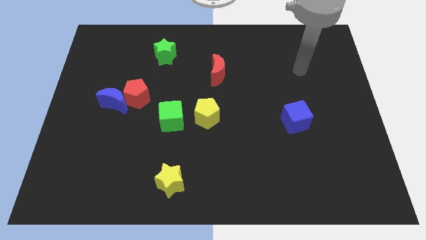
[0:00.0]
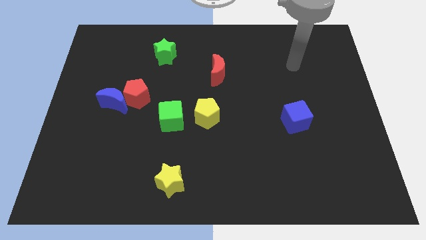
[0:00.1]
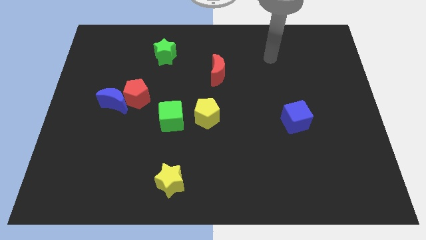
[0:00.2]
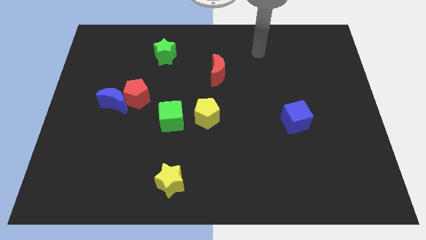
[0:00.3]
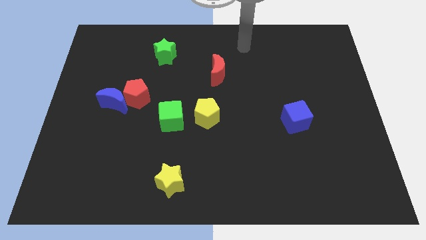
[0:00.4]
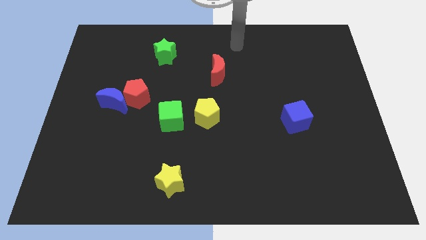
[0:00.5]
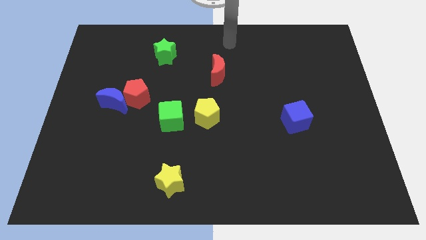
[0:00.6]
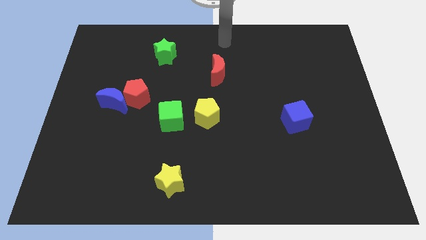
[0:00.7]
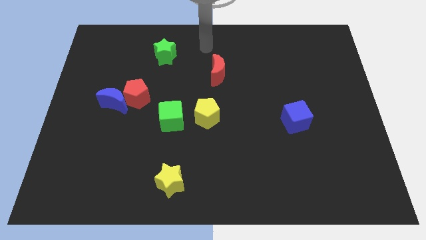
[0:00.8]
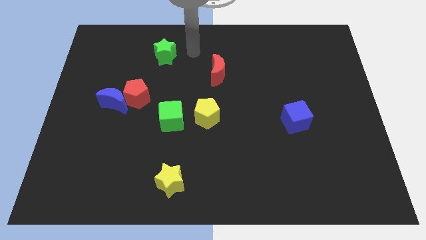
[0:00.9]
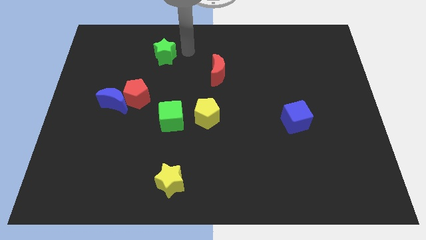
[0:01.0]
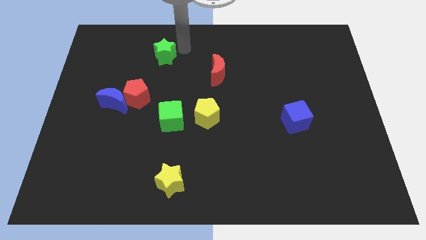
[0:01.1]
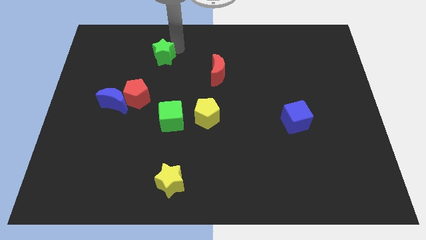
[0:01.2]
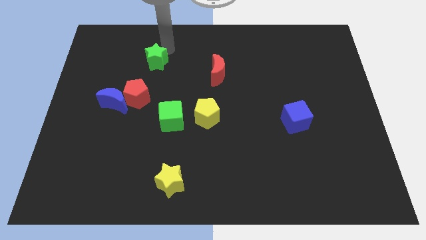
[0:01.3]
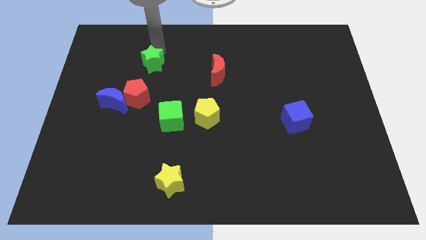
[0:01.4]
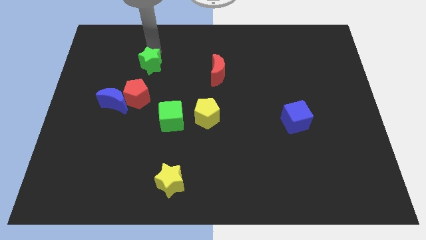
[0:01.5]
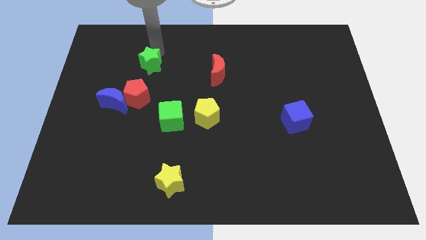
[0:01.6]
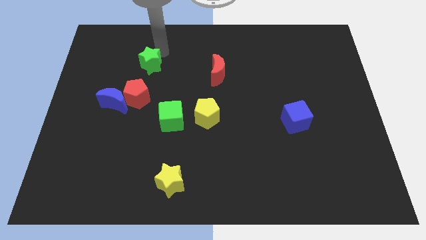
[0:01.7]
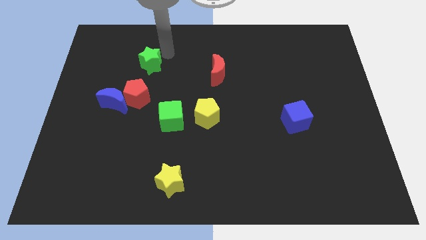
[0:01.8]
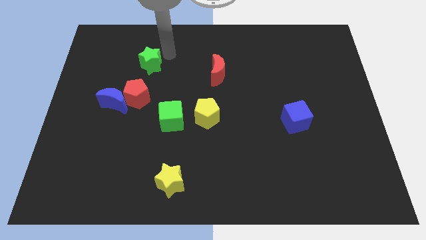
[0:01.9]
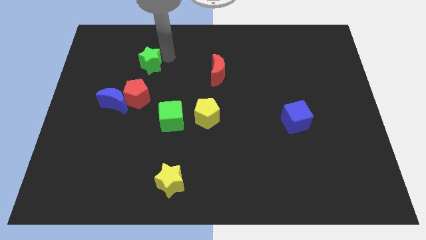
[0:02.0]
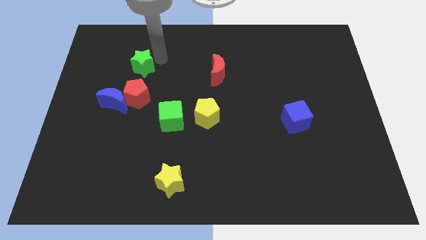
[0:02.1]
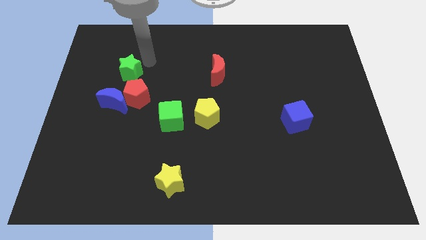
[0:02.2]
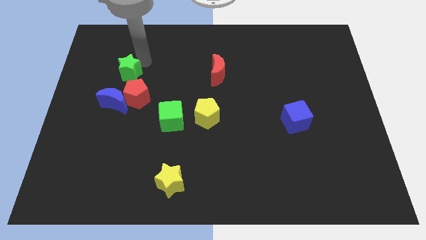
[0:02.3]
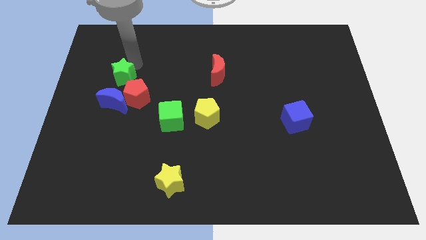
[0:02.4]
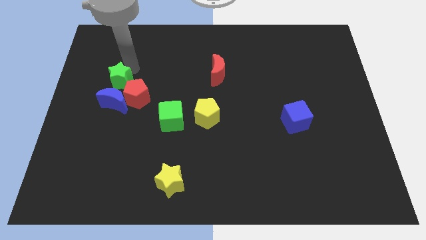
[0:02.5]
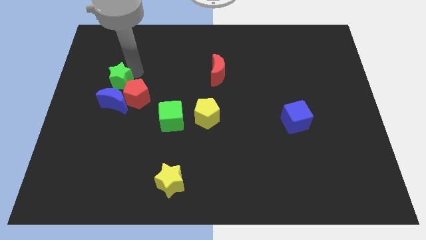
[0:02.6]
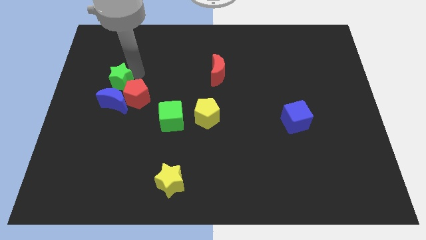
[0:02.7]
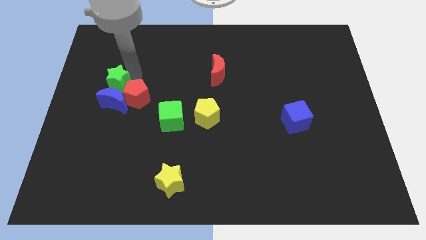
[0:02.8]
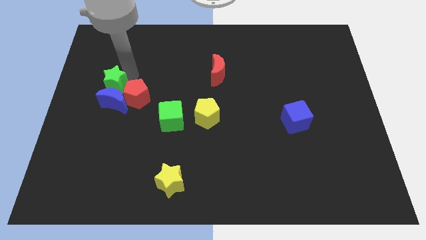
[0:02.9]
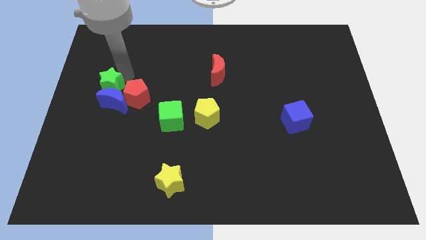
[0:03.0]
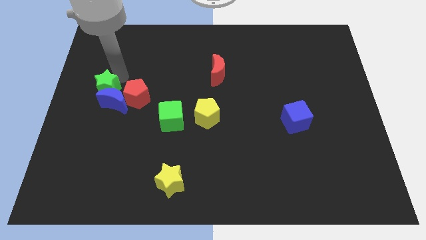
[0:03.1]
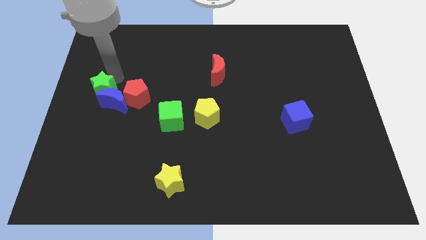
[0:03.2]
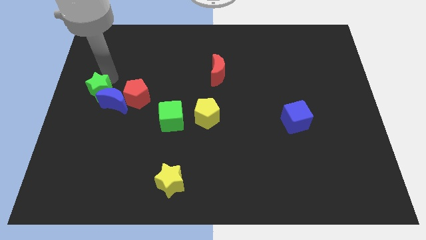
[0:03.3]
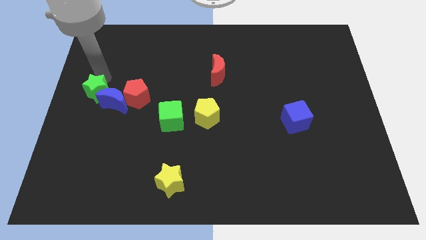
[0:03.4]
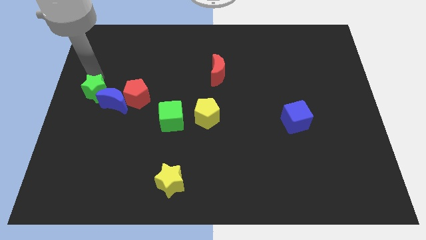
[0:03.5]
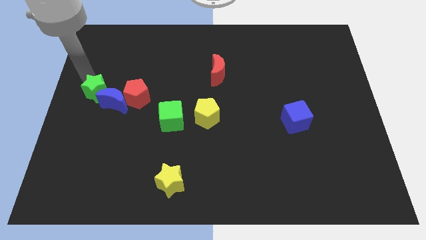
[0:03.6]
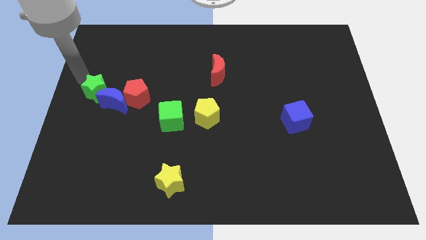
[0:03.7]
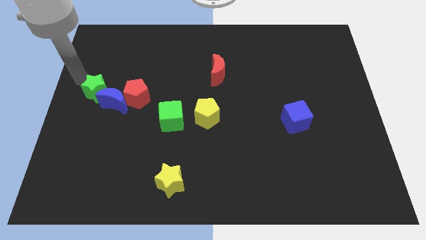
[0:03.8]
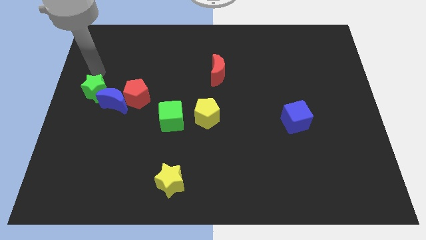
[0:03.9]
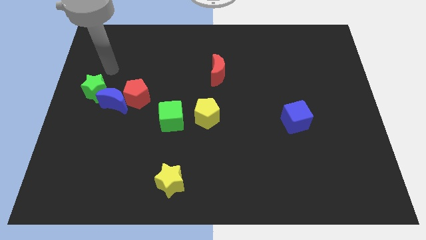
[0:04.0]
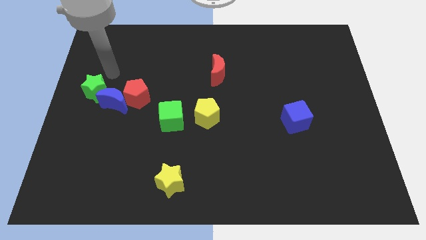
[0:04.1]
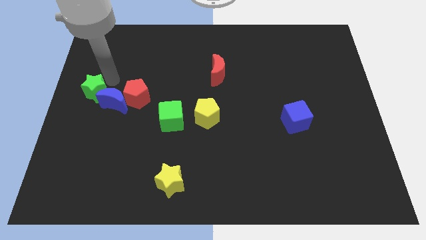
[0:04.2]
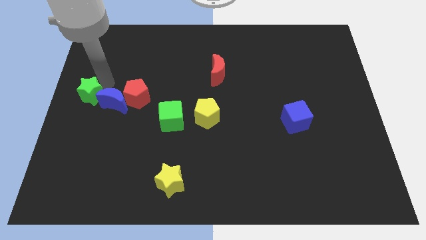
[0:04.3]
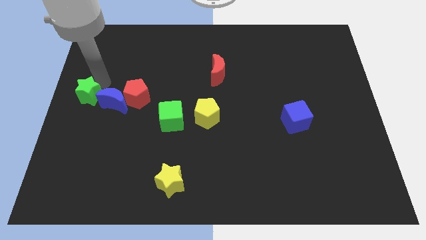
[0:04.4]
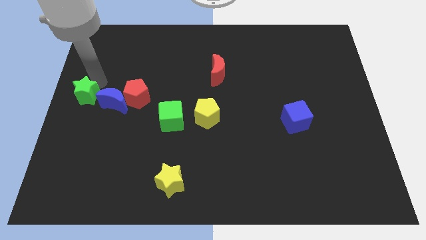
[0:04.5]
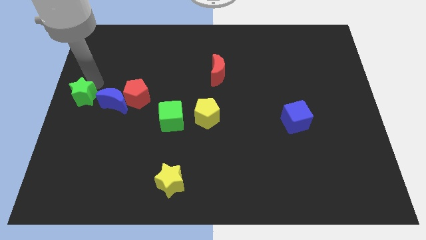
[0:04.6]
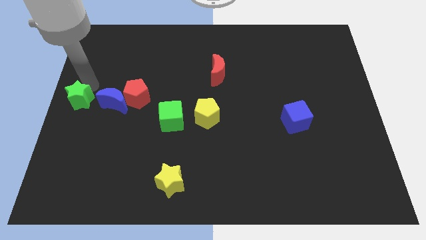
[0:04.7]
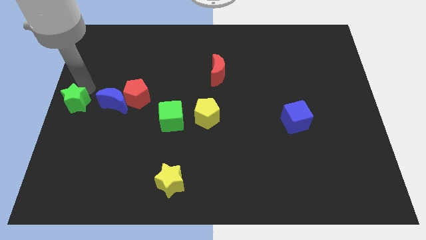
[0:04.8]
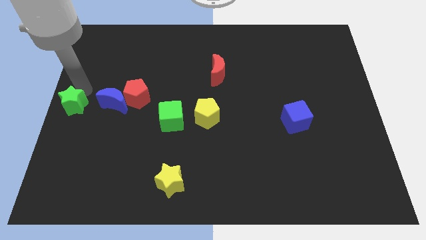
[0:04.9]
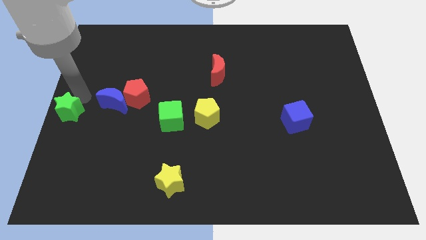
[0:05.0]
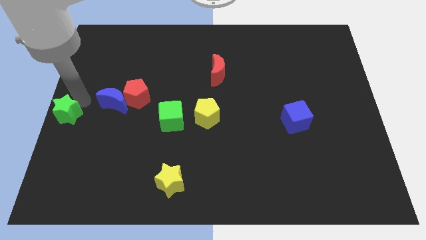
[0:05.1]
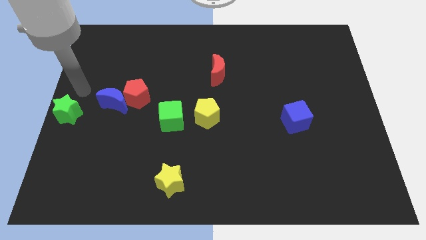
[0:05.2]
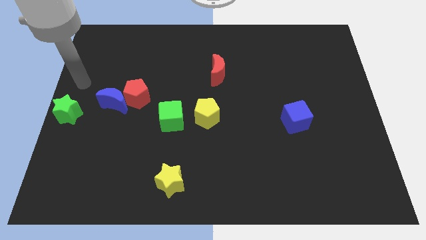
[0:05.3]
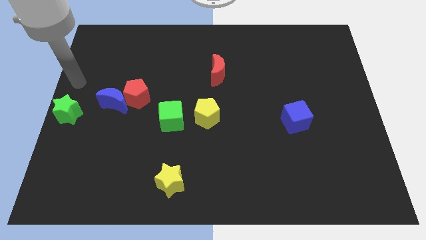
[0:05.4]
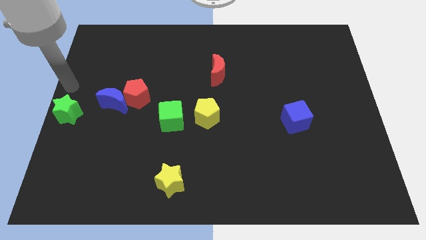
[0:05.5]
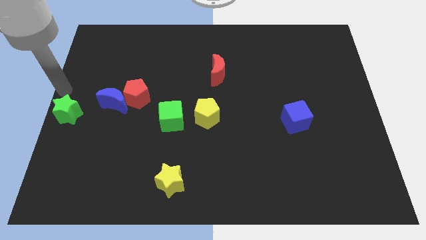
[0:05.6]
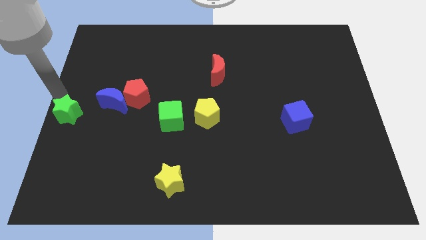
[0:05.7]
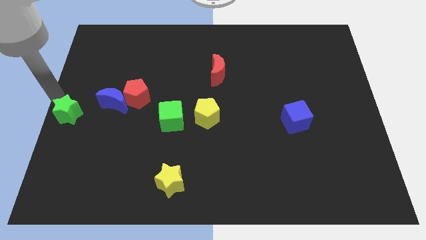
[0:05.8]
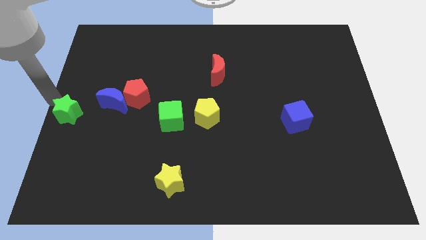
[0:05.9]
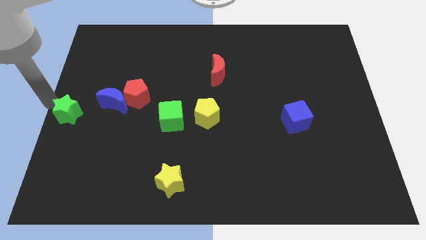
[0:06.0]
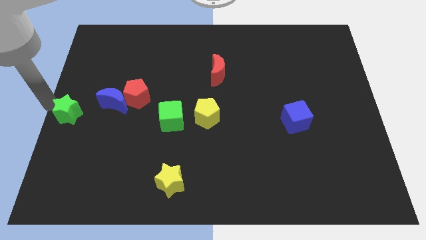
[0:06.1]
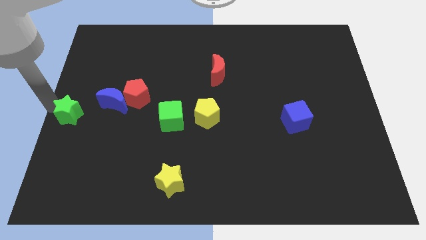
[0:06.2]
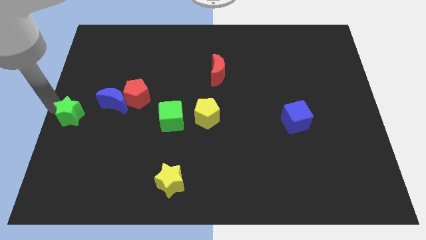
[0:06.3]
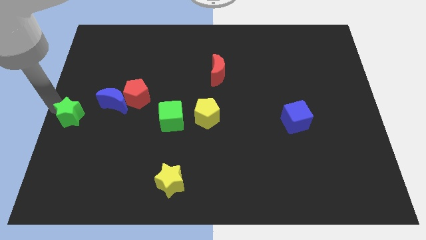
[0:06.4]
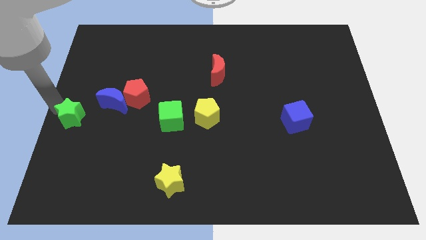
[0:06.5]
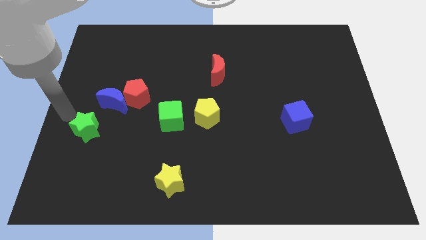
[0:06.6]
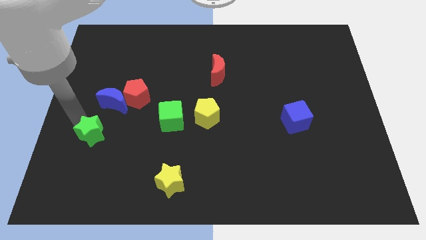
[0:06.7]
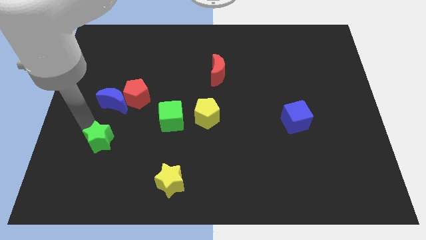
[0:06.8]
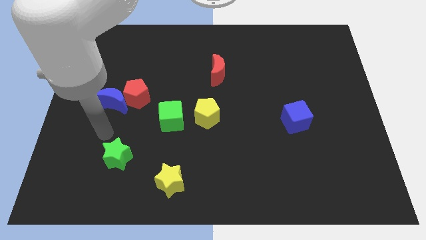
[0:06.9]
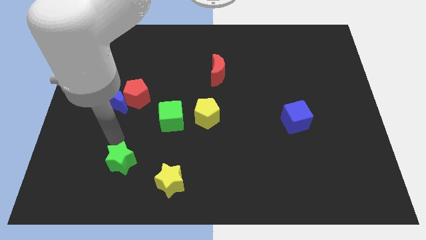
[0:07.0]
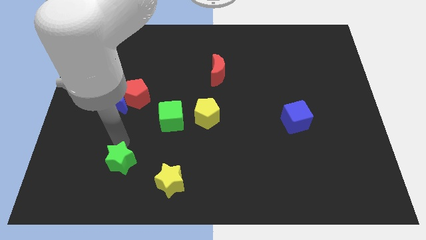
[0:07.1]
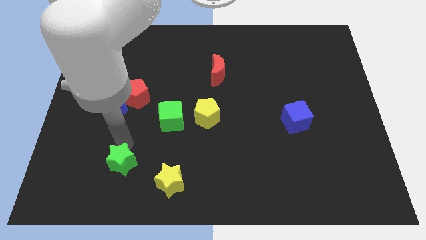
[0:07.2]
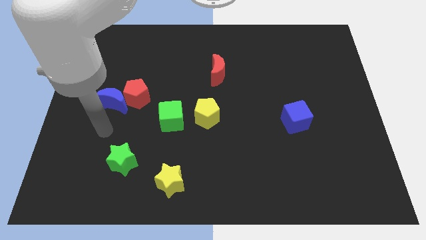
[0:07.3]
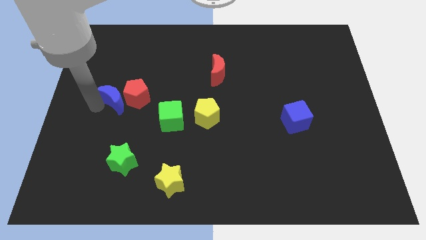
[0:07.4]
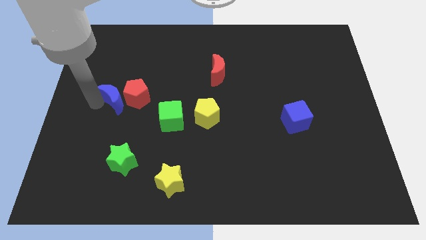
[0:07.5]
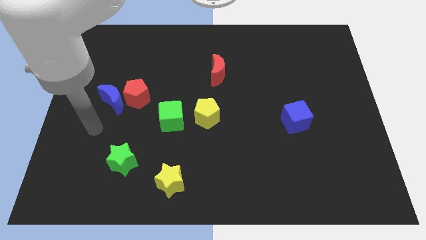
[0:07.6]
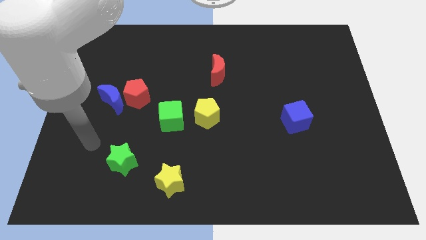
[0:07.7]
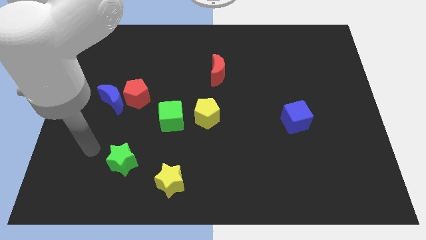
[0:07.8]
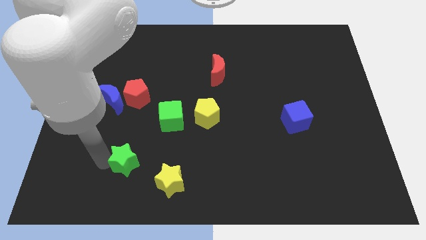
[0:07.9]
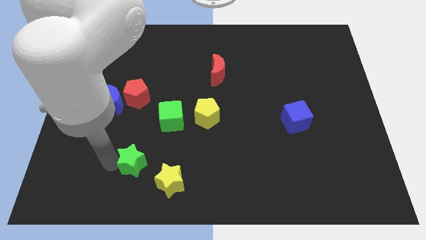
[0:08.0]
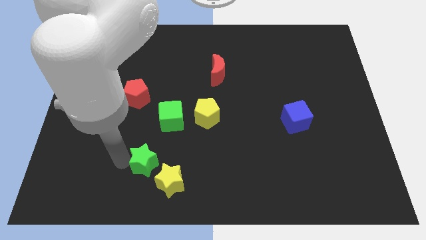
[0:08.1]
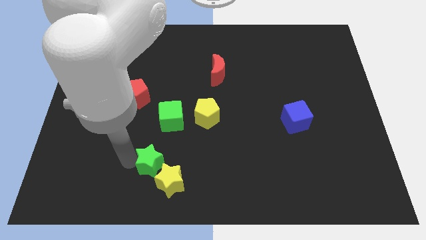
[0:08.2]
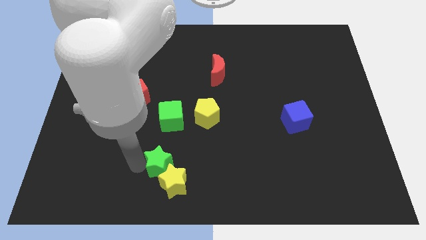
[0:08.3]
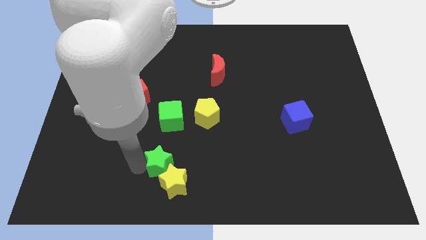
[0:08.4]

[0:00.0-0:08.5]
move the green star close to the yellow star

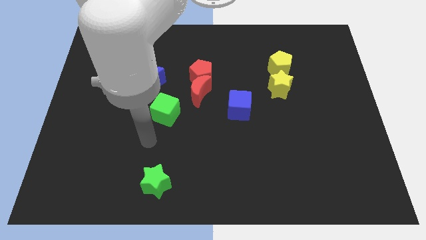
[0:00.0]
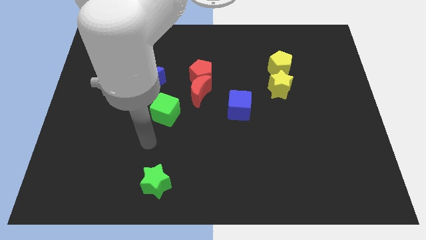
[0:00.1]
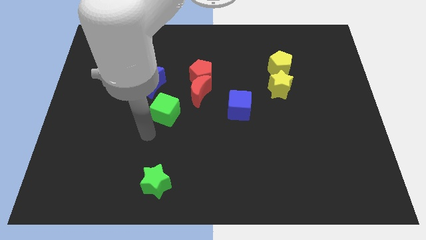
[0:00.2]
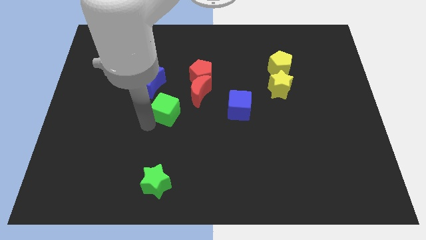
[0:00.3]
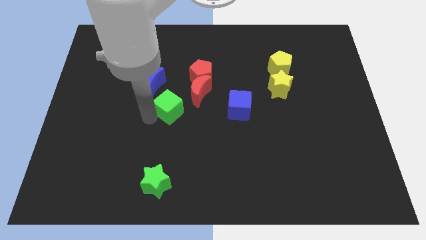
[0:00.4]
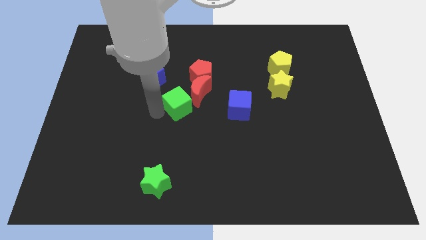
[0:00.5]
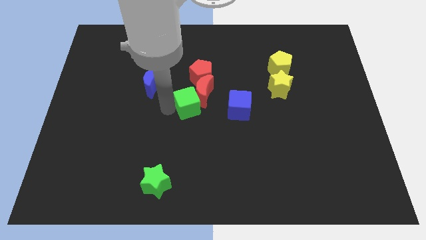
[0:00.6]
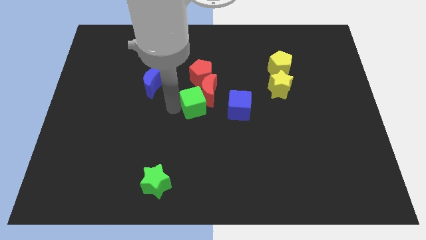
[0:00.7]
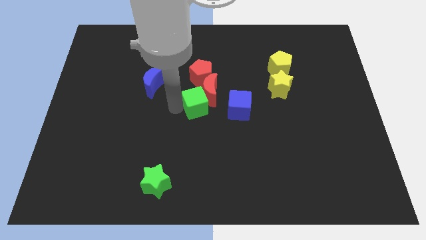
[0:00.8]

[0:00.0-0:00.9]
put the green cube next to the red moon
